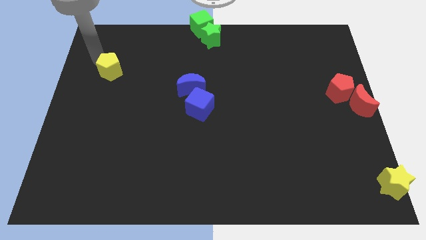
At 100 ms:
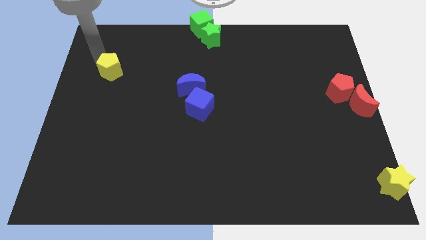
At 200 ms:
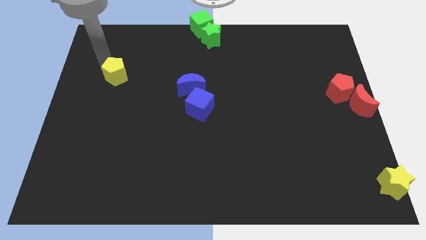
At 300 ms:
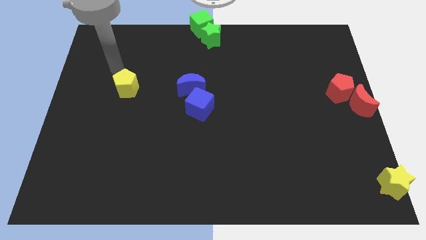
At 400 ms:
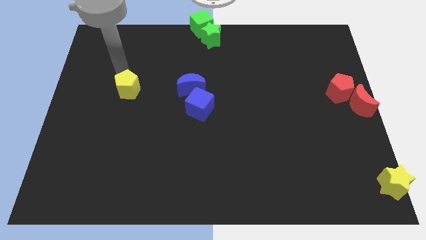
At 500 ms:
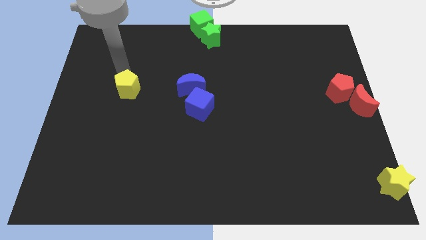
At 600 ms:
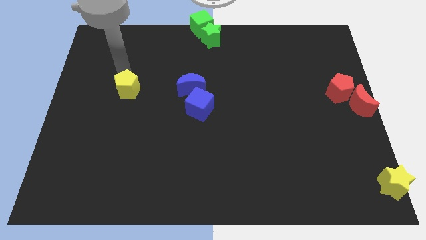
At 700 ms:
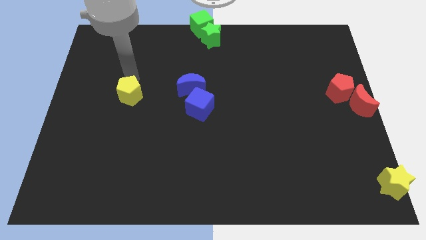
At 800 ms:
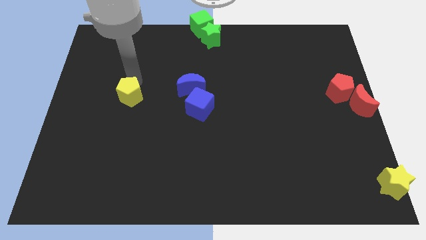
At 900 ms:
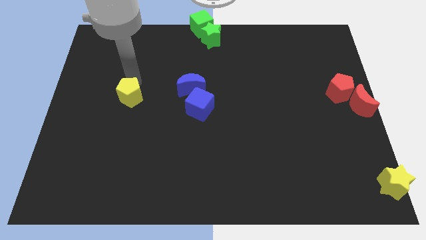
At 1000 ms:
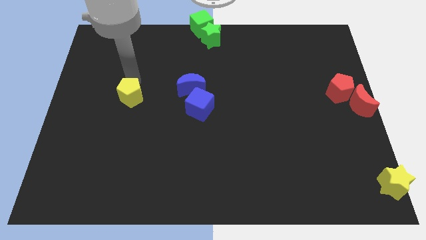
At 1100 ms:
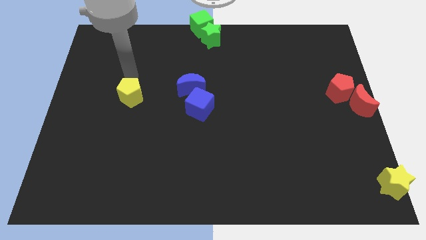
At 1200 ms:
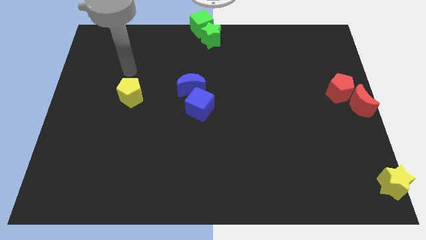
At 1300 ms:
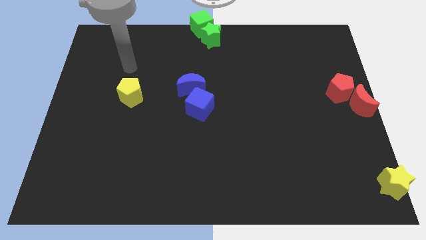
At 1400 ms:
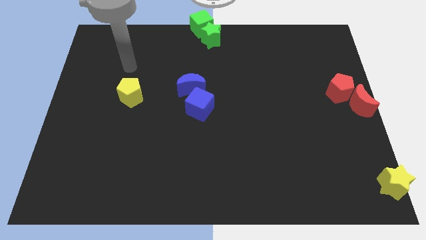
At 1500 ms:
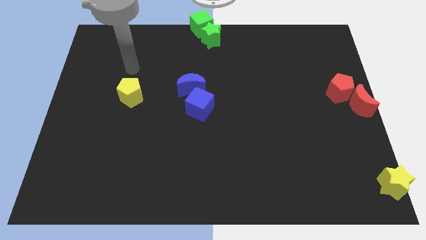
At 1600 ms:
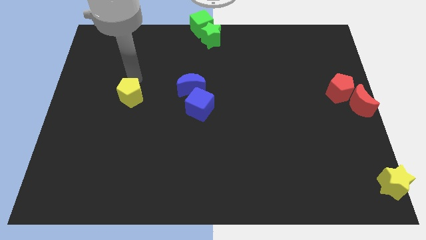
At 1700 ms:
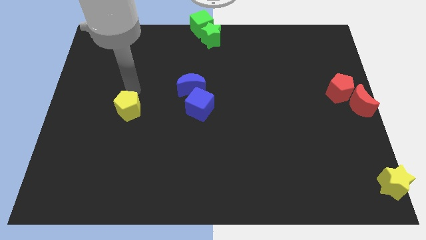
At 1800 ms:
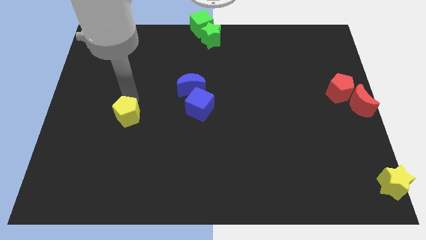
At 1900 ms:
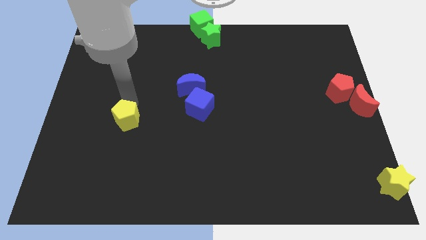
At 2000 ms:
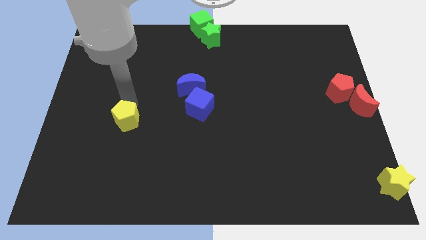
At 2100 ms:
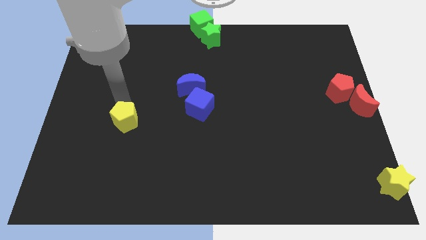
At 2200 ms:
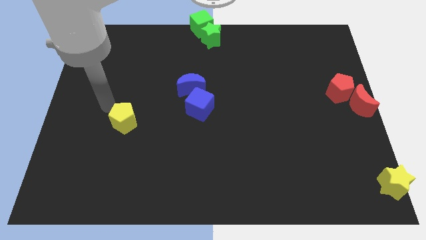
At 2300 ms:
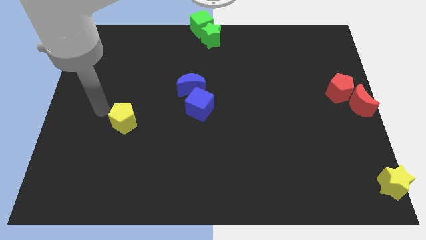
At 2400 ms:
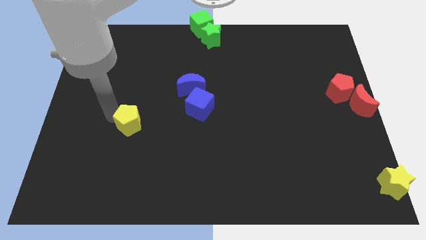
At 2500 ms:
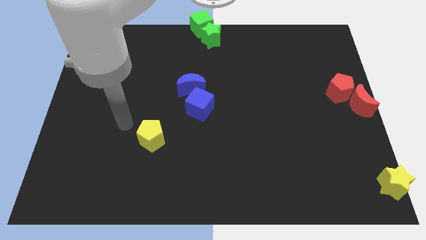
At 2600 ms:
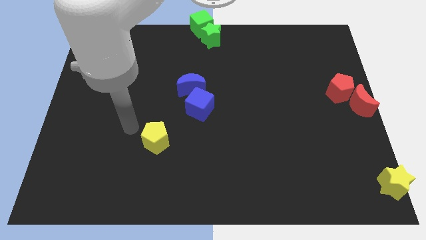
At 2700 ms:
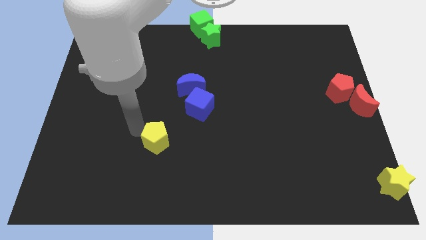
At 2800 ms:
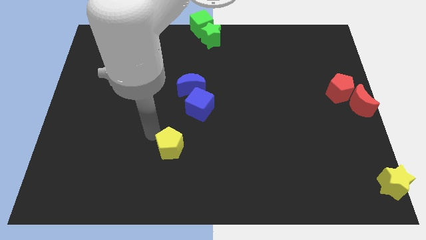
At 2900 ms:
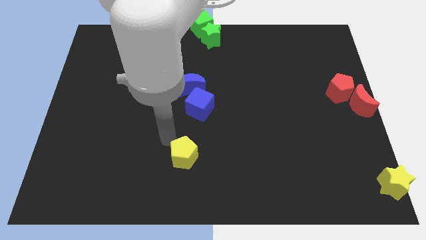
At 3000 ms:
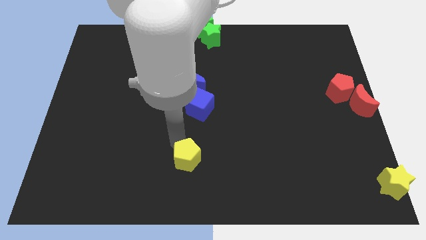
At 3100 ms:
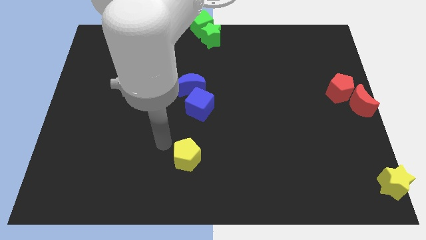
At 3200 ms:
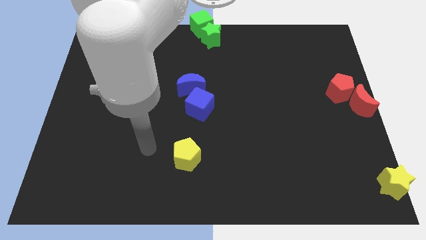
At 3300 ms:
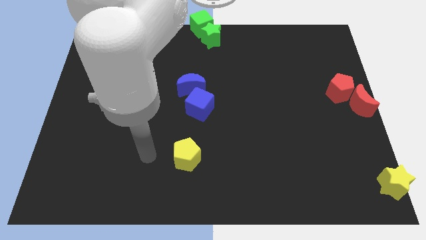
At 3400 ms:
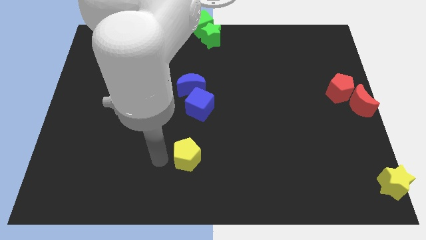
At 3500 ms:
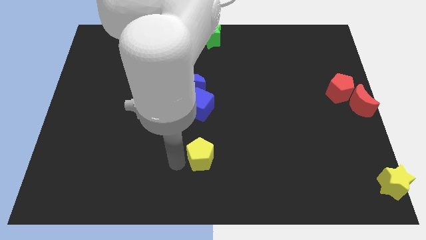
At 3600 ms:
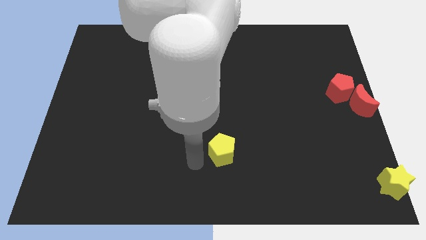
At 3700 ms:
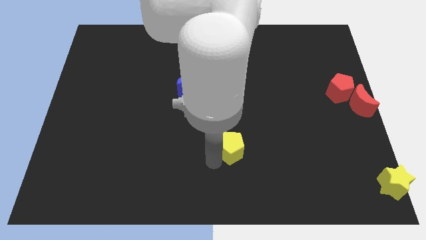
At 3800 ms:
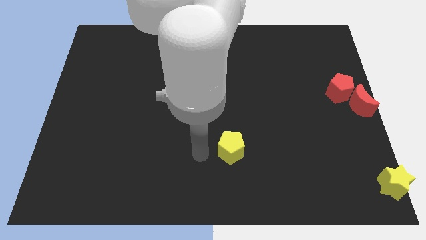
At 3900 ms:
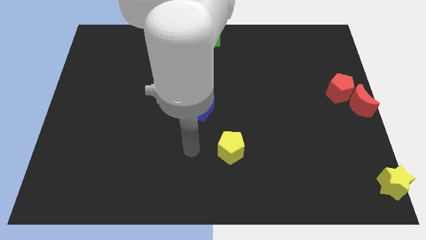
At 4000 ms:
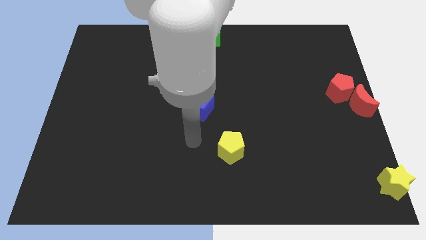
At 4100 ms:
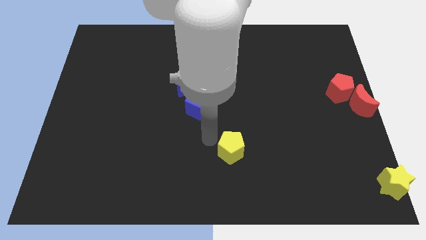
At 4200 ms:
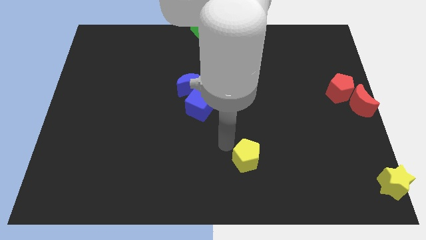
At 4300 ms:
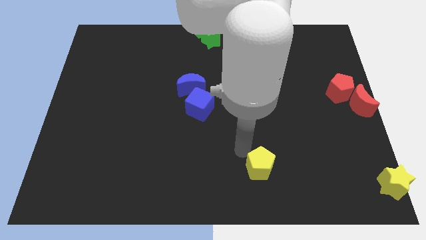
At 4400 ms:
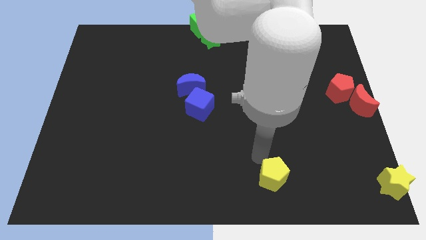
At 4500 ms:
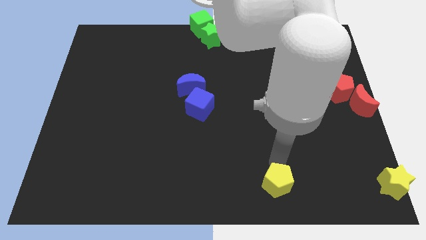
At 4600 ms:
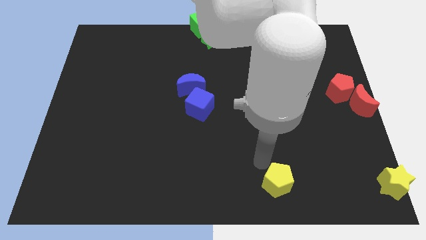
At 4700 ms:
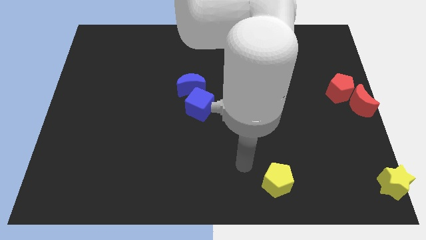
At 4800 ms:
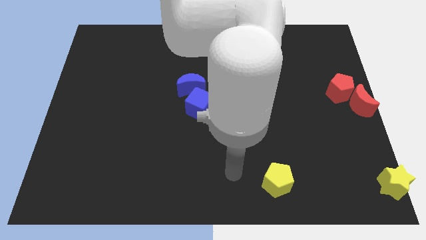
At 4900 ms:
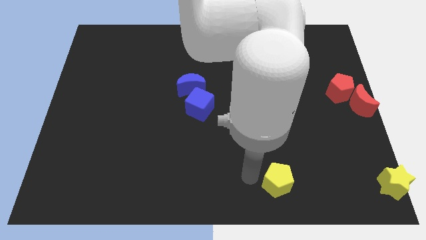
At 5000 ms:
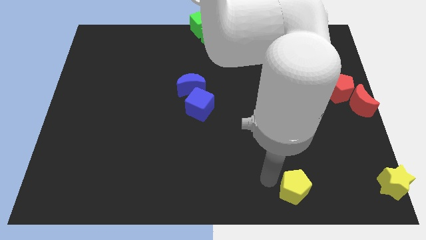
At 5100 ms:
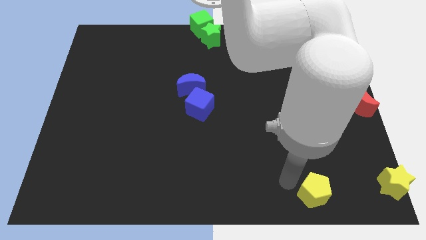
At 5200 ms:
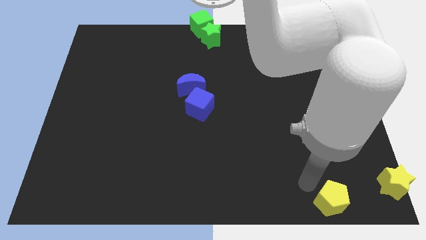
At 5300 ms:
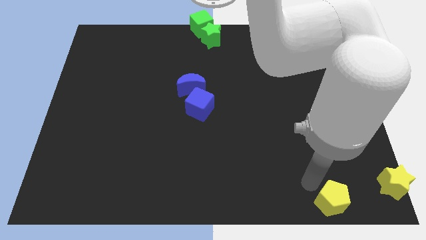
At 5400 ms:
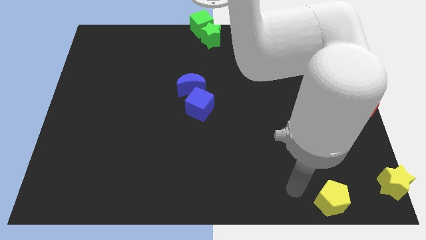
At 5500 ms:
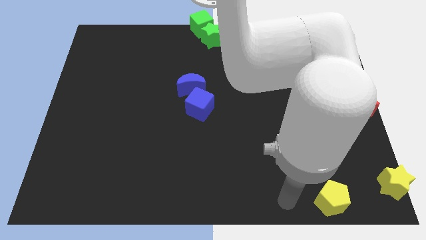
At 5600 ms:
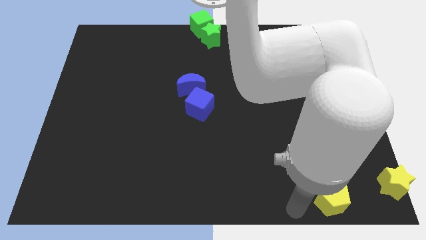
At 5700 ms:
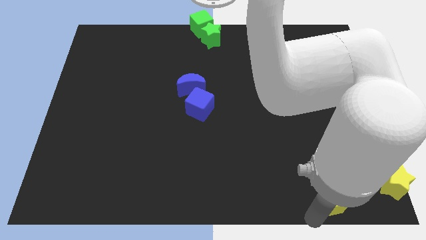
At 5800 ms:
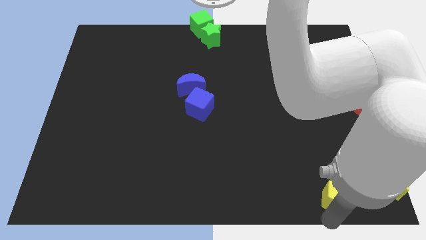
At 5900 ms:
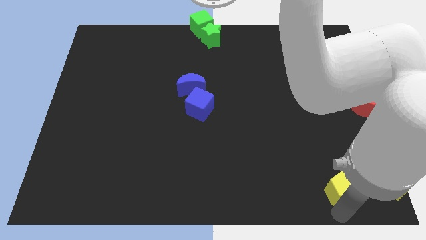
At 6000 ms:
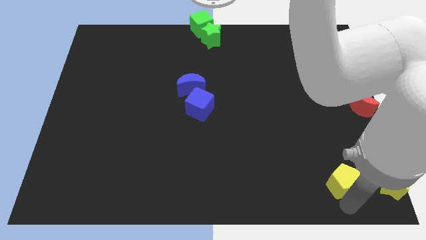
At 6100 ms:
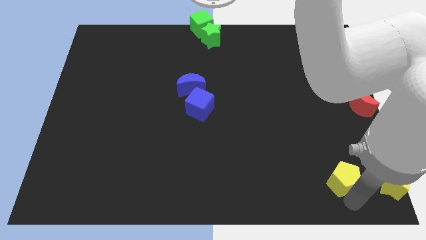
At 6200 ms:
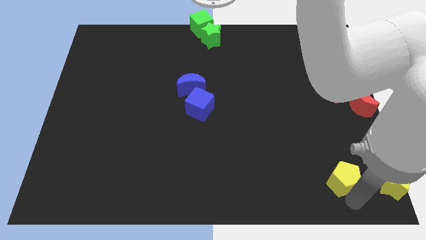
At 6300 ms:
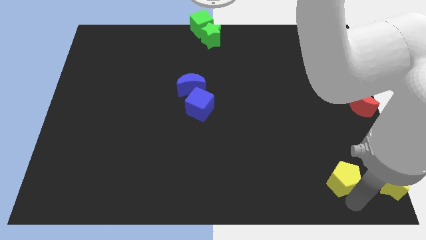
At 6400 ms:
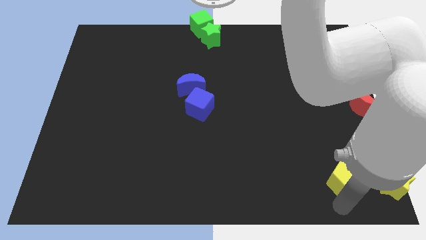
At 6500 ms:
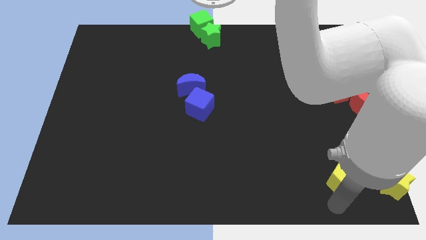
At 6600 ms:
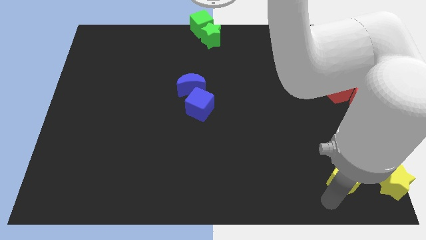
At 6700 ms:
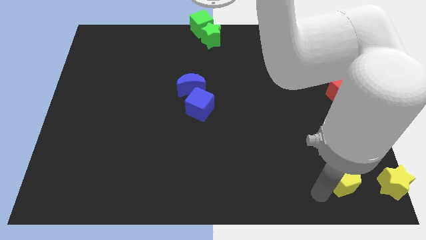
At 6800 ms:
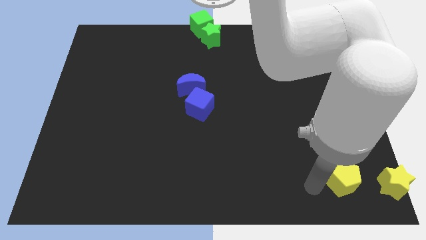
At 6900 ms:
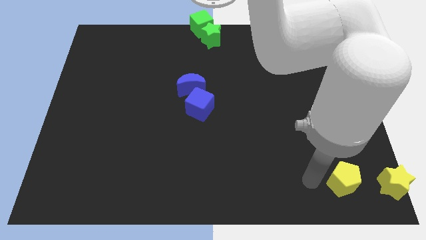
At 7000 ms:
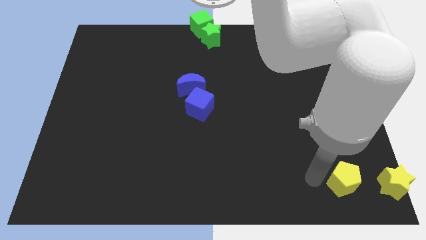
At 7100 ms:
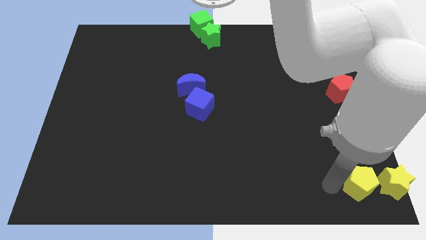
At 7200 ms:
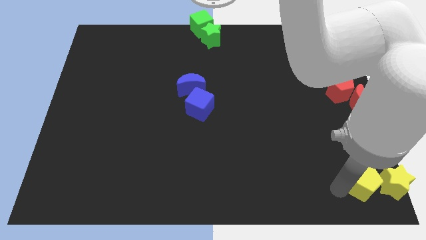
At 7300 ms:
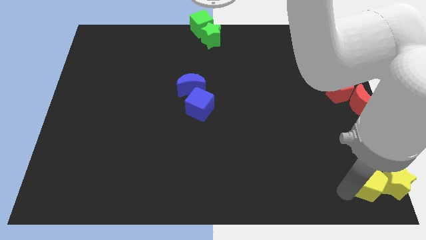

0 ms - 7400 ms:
place the yellow pentagon to the bottom right of the board

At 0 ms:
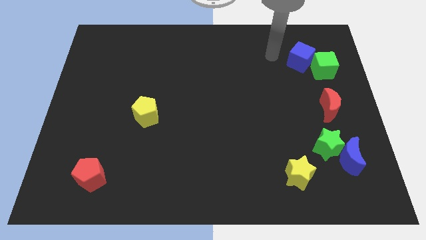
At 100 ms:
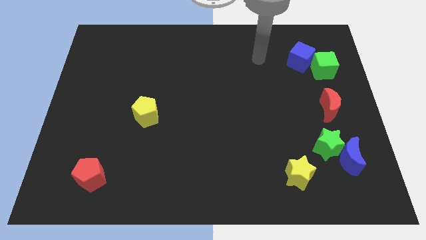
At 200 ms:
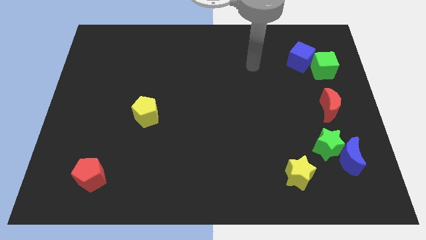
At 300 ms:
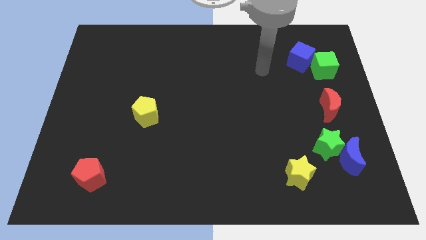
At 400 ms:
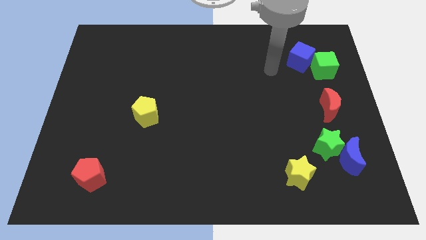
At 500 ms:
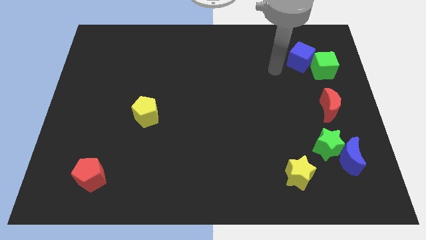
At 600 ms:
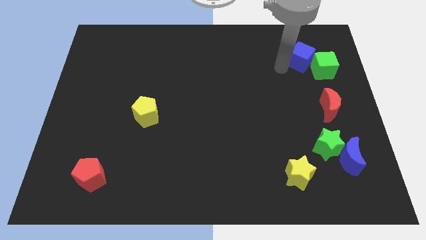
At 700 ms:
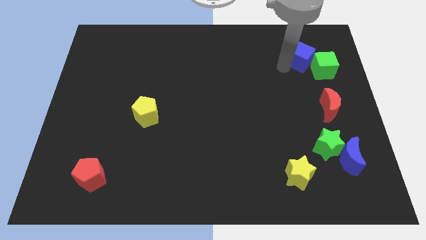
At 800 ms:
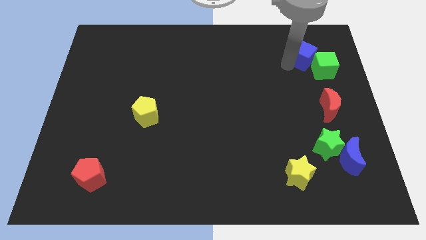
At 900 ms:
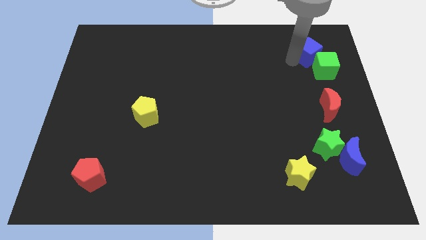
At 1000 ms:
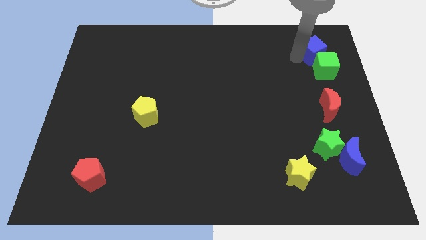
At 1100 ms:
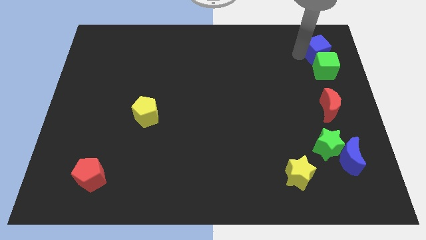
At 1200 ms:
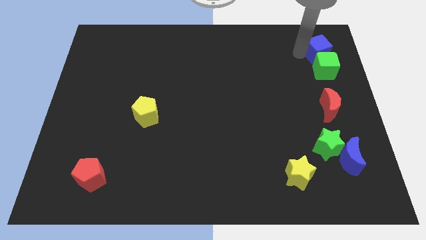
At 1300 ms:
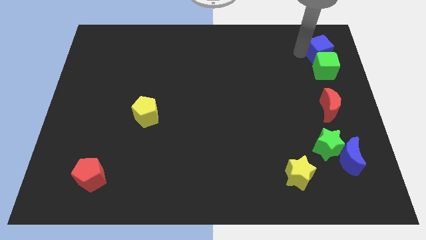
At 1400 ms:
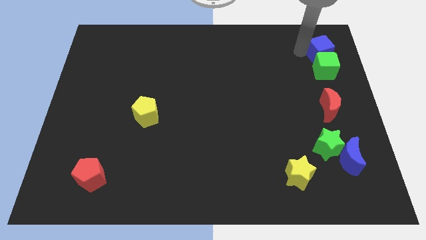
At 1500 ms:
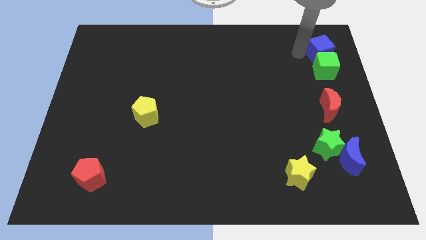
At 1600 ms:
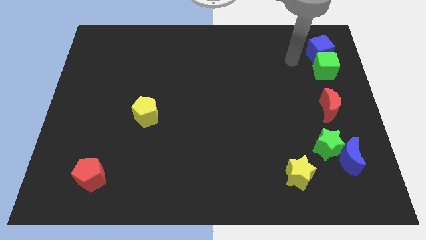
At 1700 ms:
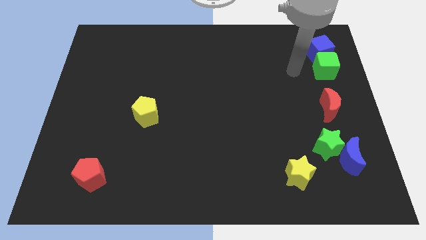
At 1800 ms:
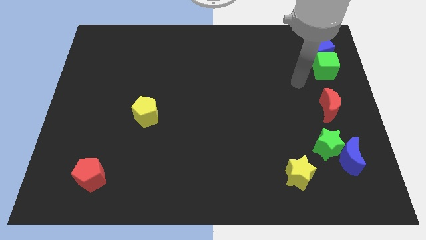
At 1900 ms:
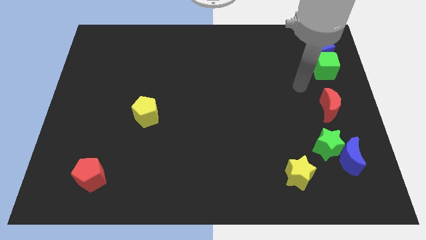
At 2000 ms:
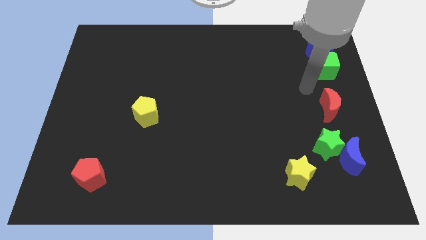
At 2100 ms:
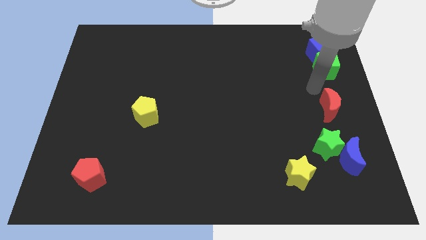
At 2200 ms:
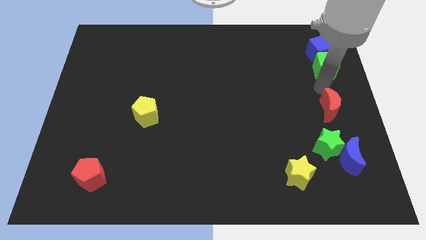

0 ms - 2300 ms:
place the blue cube above the green cube
